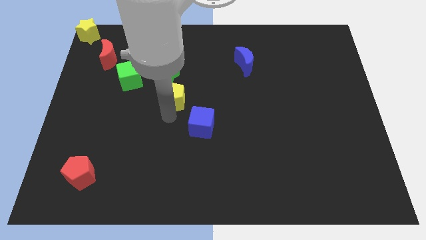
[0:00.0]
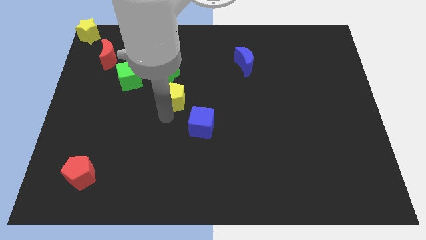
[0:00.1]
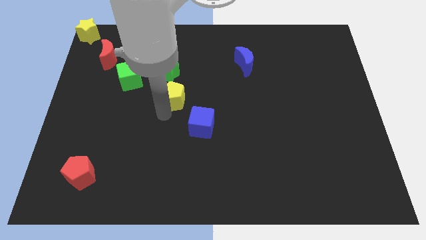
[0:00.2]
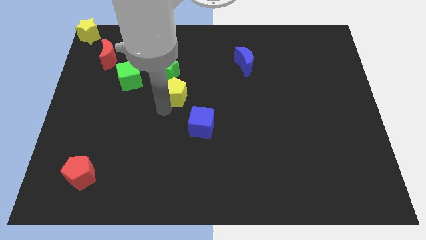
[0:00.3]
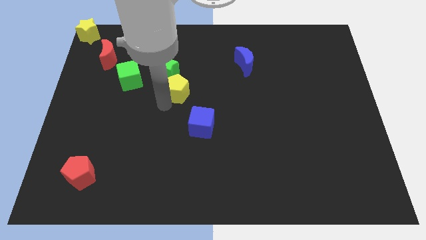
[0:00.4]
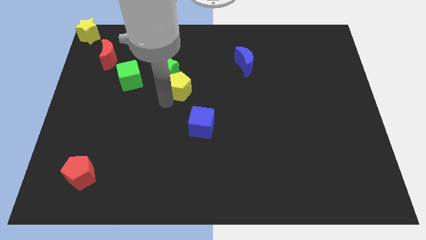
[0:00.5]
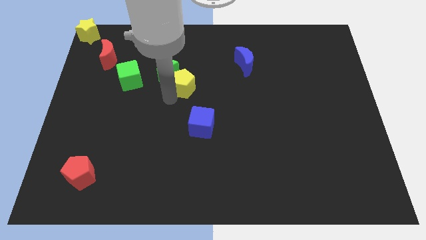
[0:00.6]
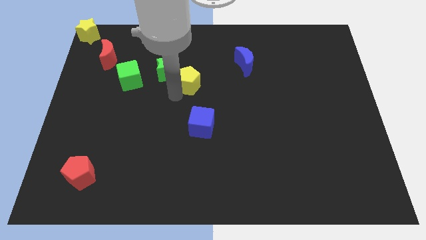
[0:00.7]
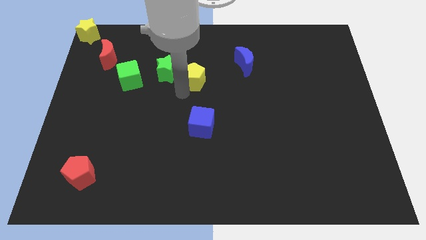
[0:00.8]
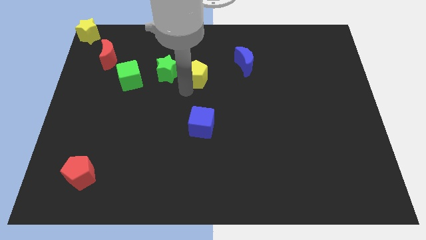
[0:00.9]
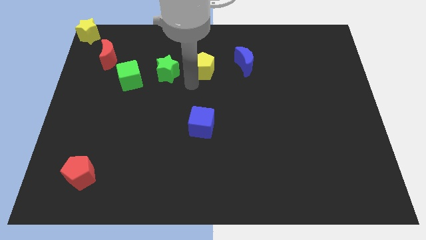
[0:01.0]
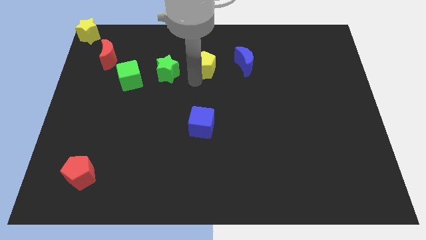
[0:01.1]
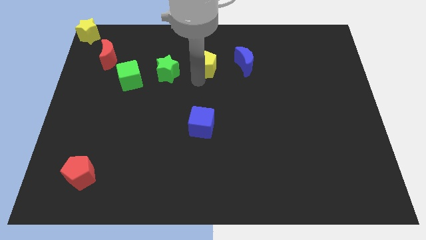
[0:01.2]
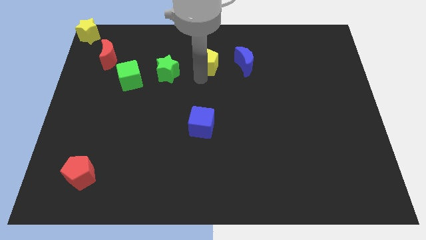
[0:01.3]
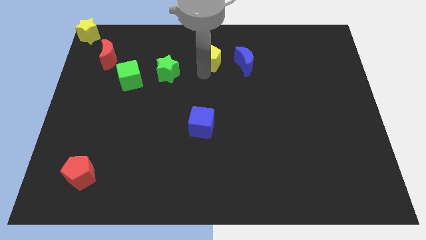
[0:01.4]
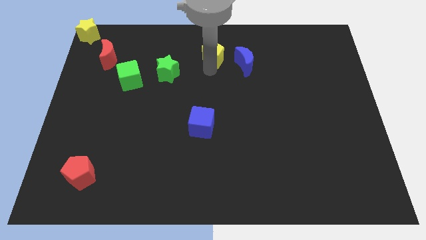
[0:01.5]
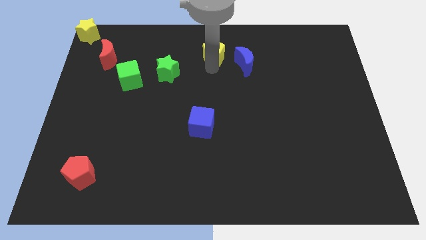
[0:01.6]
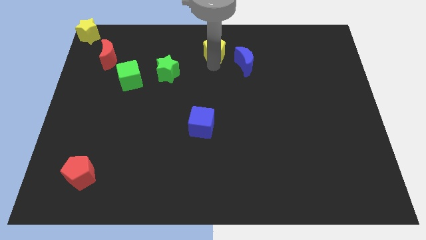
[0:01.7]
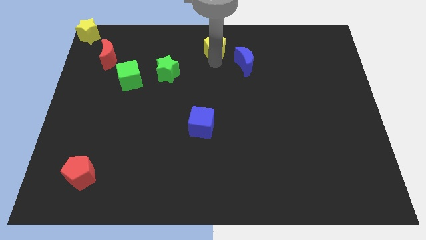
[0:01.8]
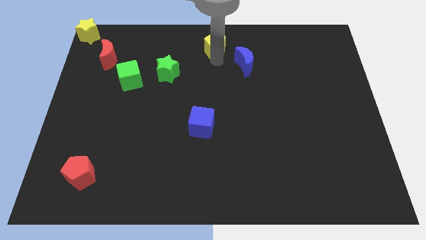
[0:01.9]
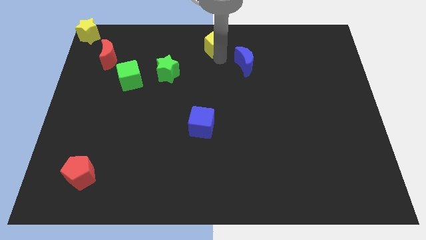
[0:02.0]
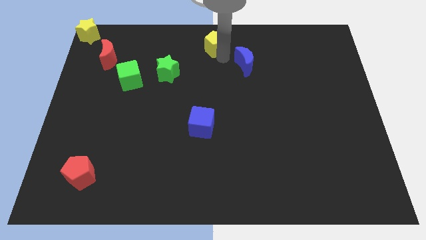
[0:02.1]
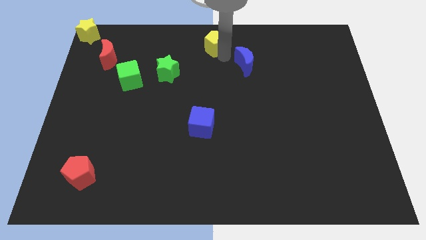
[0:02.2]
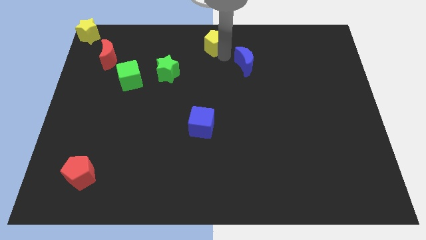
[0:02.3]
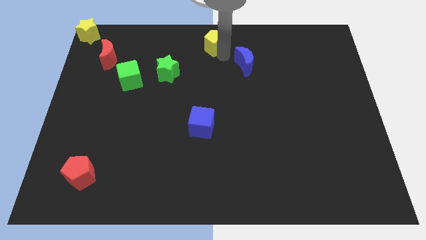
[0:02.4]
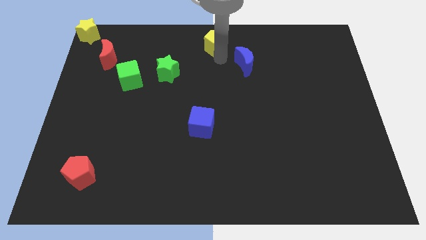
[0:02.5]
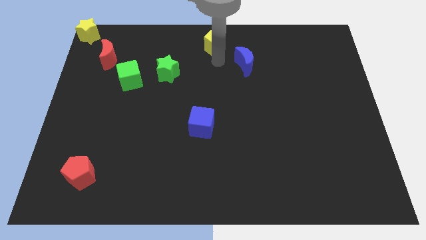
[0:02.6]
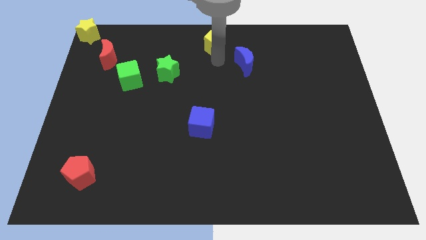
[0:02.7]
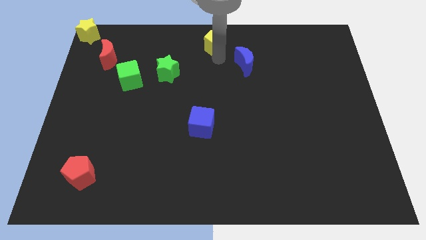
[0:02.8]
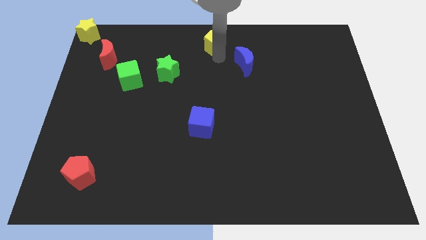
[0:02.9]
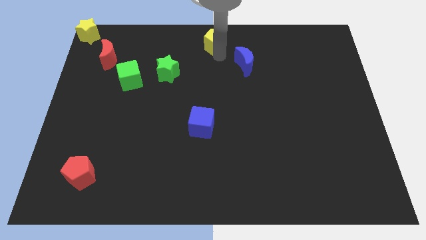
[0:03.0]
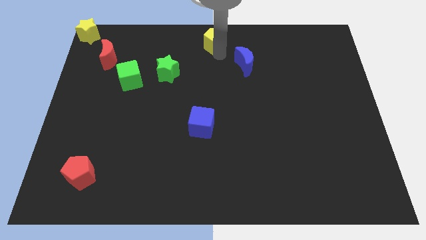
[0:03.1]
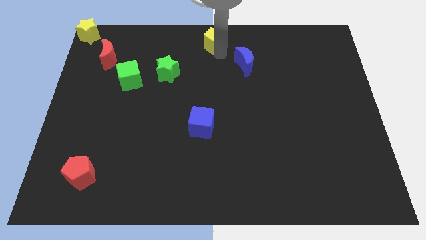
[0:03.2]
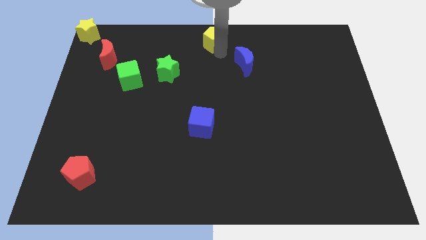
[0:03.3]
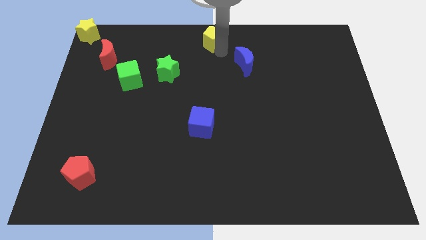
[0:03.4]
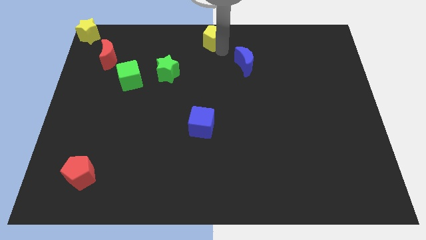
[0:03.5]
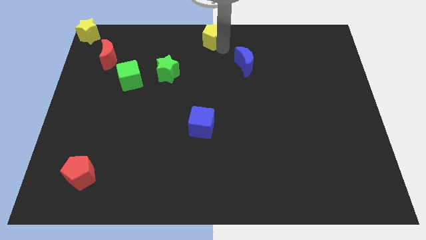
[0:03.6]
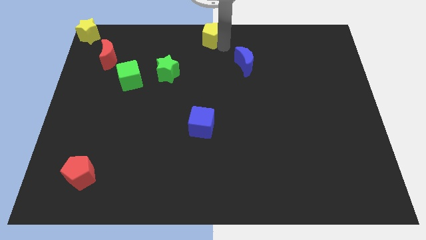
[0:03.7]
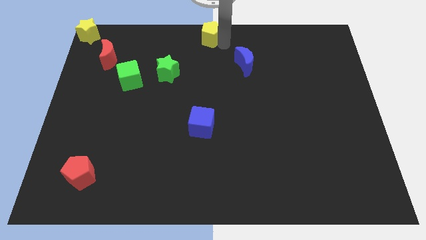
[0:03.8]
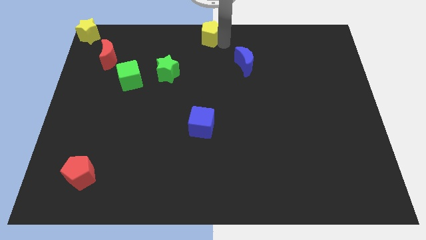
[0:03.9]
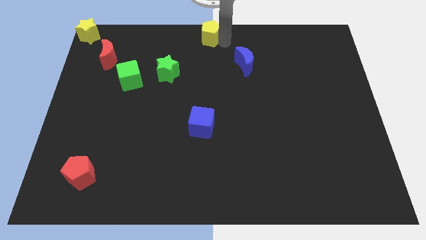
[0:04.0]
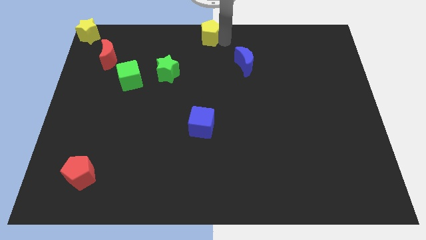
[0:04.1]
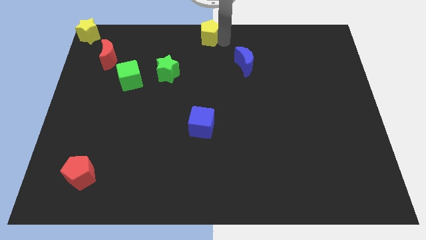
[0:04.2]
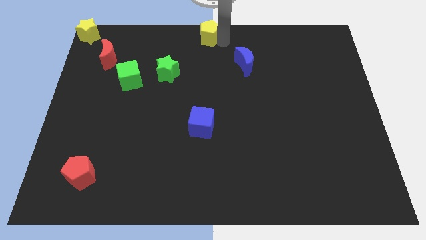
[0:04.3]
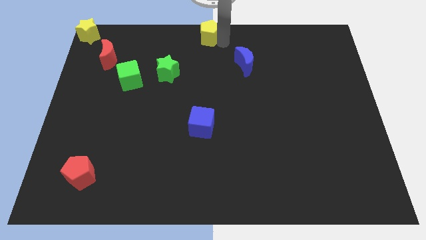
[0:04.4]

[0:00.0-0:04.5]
move the yellow pentagon to the top center of the board

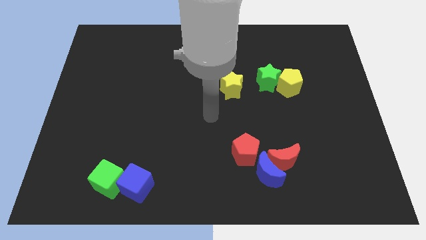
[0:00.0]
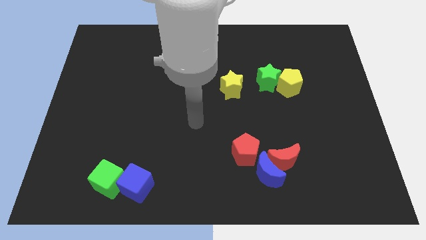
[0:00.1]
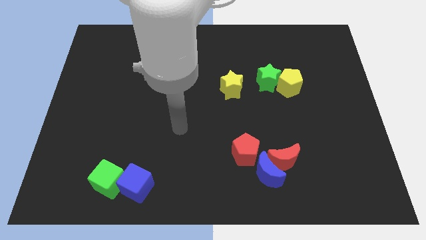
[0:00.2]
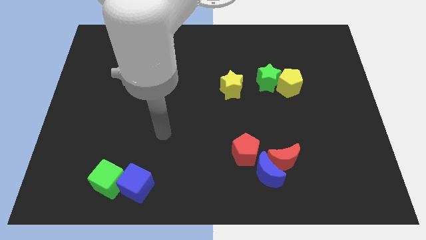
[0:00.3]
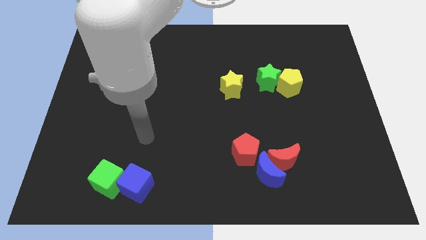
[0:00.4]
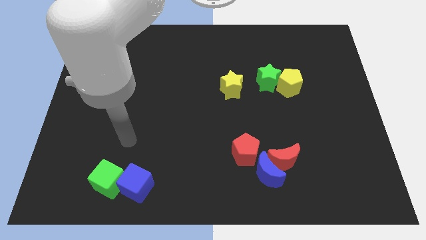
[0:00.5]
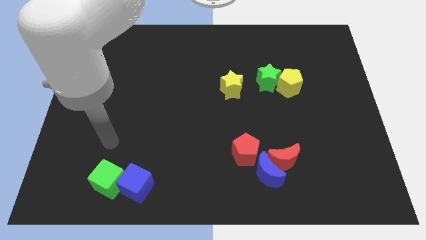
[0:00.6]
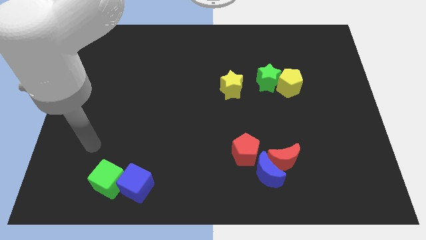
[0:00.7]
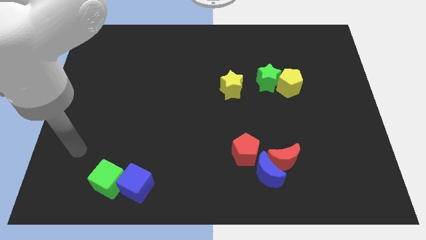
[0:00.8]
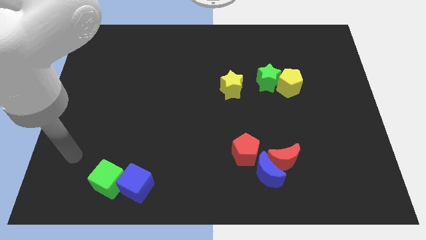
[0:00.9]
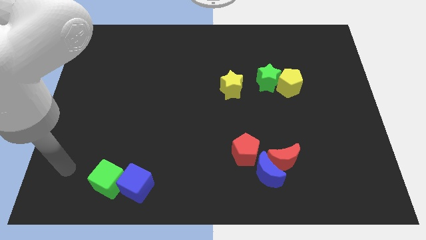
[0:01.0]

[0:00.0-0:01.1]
put your hand at the left of the green cube

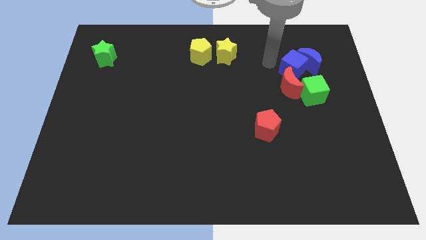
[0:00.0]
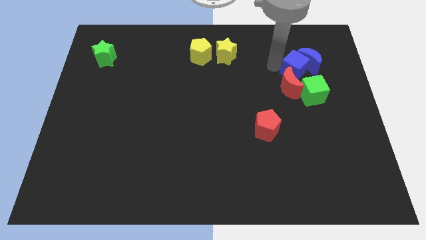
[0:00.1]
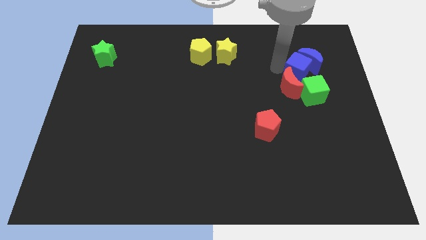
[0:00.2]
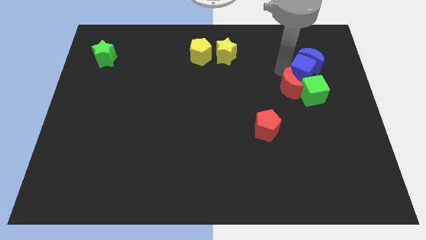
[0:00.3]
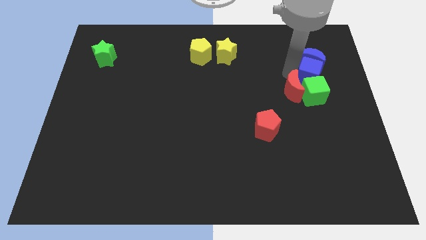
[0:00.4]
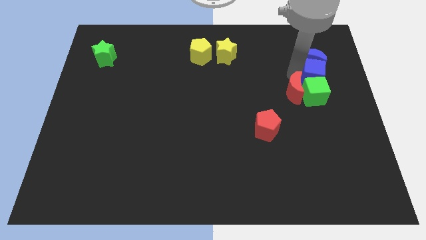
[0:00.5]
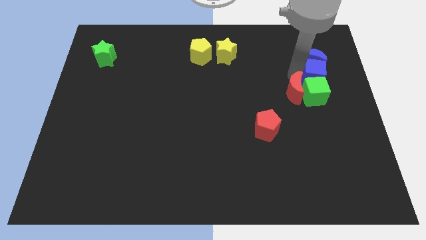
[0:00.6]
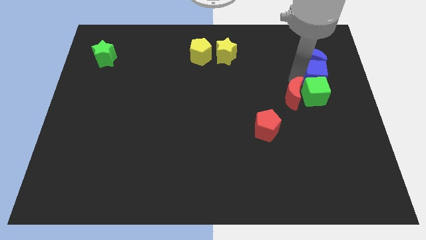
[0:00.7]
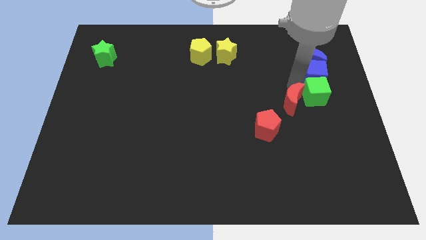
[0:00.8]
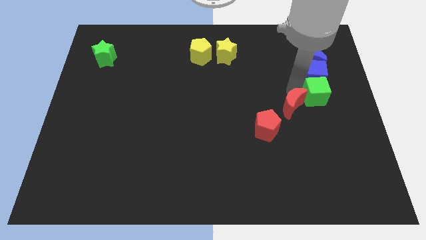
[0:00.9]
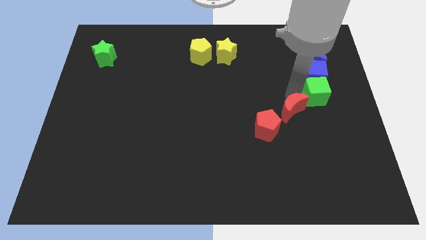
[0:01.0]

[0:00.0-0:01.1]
separate the red crescent from the blue cube

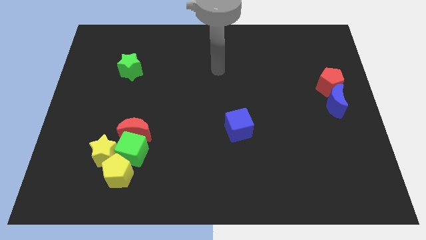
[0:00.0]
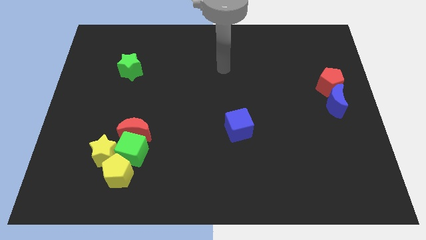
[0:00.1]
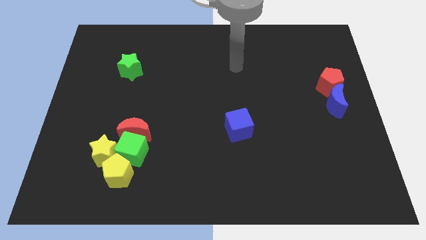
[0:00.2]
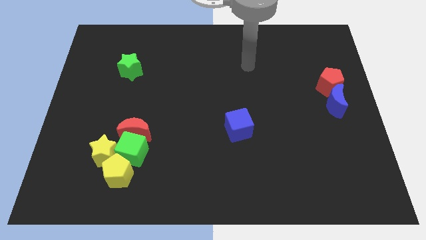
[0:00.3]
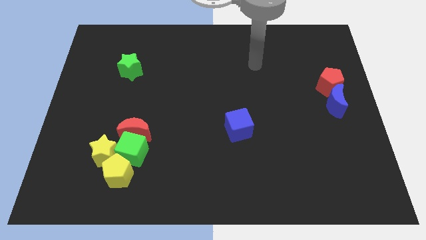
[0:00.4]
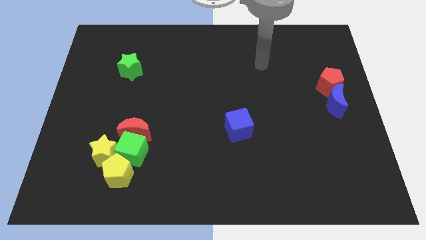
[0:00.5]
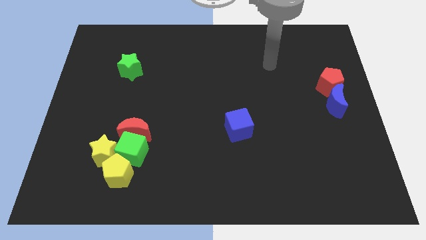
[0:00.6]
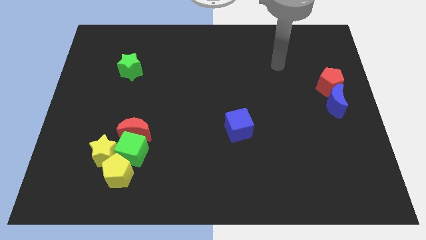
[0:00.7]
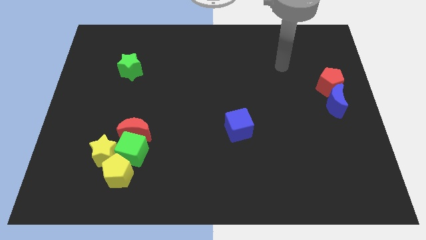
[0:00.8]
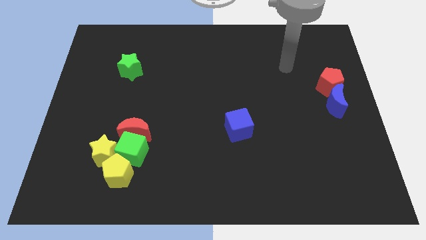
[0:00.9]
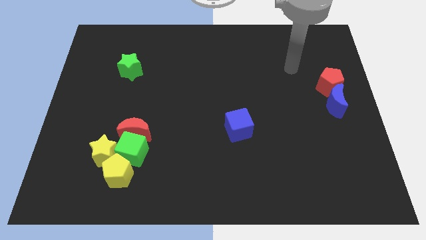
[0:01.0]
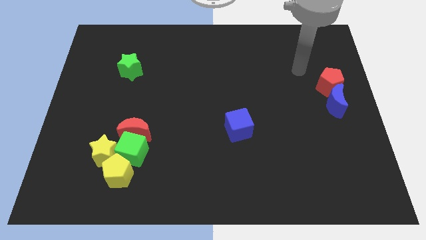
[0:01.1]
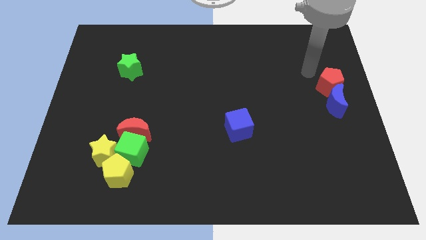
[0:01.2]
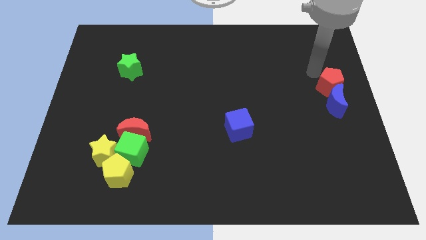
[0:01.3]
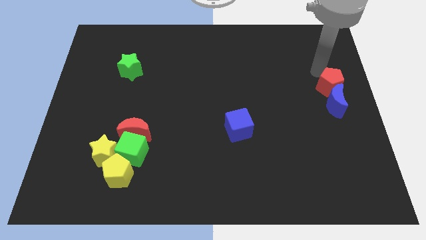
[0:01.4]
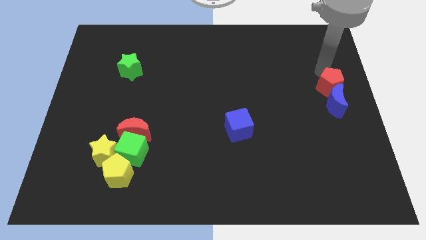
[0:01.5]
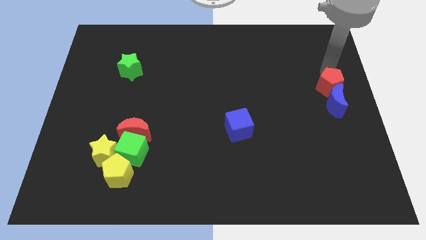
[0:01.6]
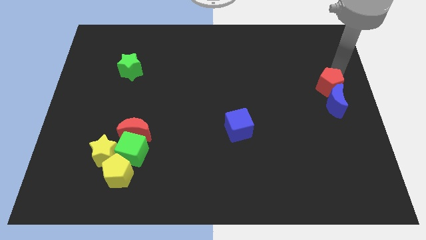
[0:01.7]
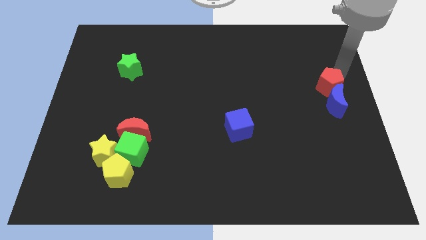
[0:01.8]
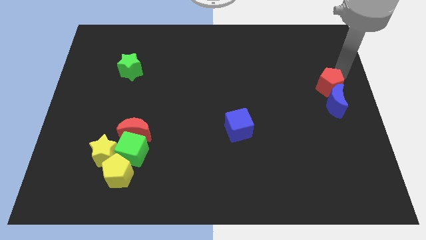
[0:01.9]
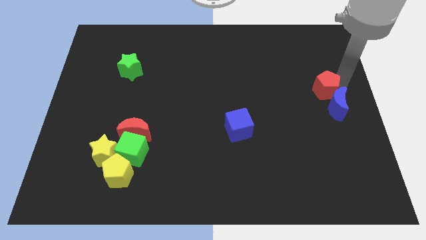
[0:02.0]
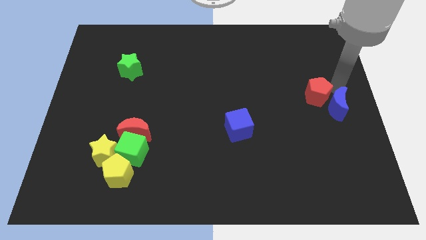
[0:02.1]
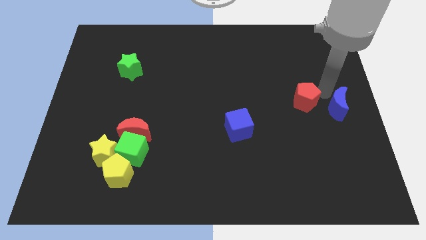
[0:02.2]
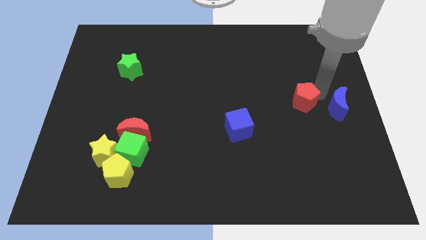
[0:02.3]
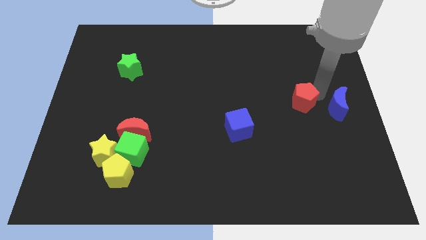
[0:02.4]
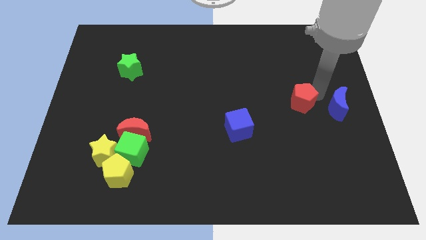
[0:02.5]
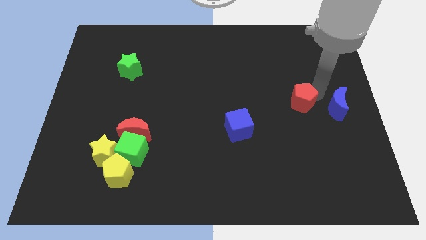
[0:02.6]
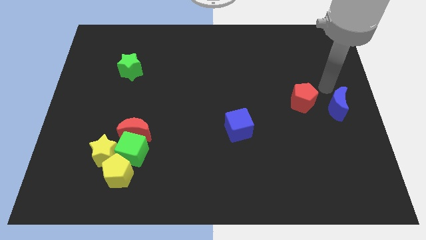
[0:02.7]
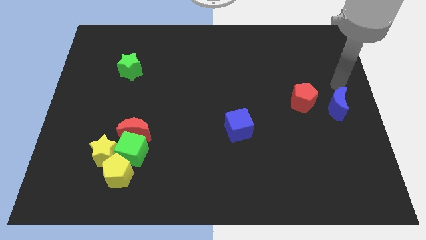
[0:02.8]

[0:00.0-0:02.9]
place the red pentagon diagonally top right to the blue cube
